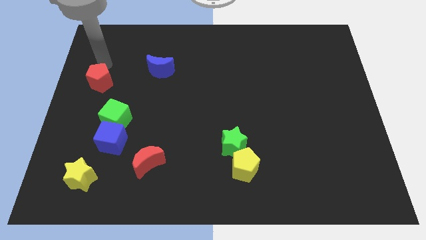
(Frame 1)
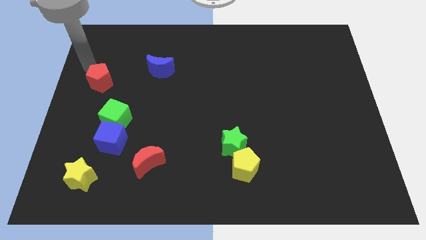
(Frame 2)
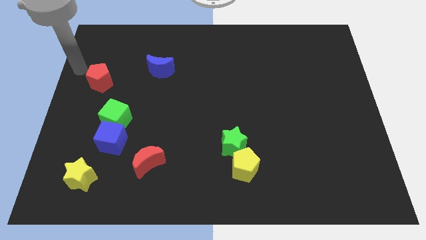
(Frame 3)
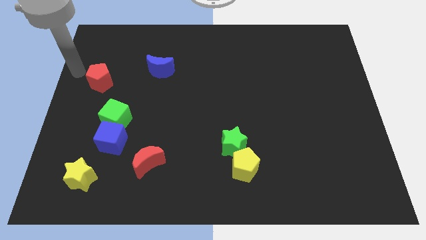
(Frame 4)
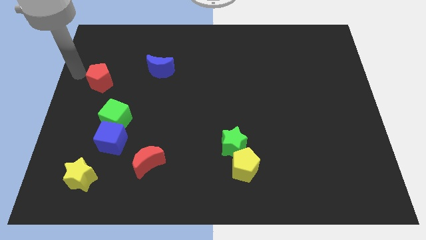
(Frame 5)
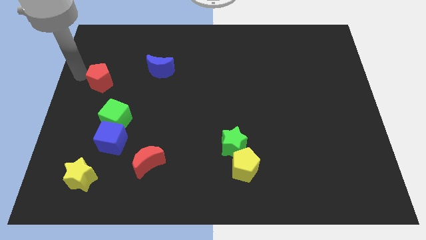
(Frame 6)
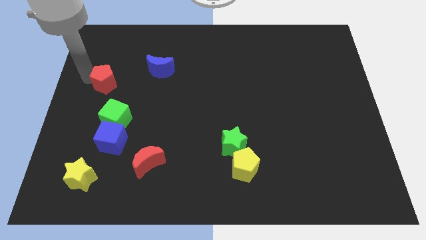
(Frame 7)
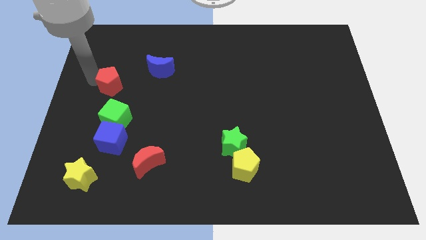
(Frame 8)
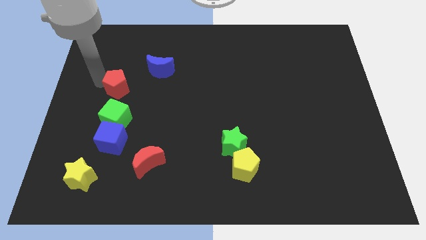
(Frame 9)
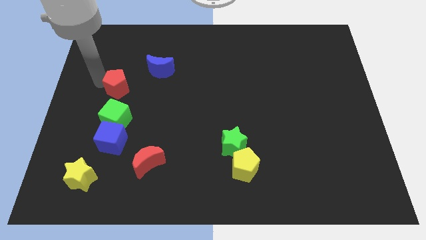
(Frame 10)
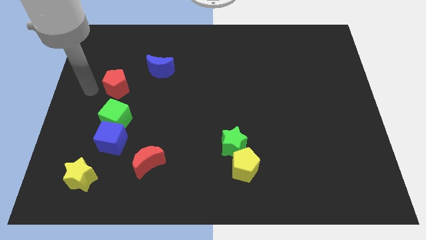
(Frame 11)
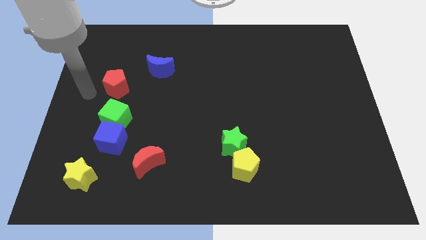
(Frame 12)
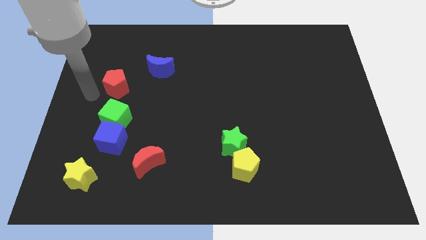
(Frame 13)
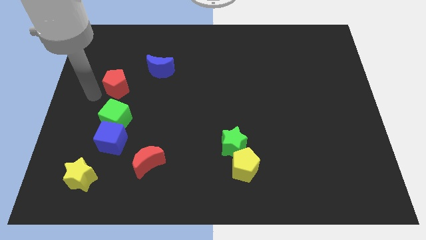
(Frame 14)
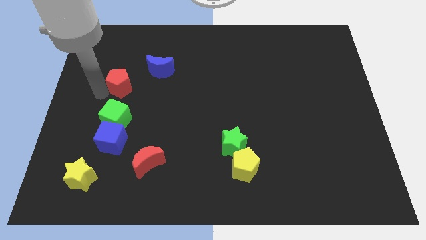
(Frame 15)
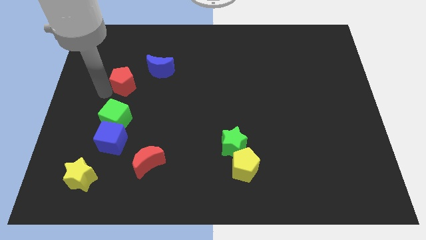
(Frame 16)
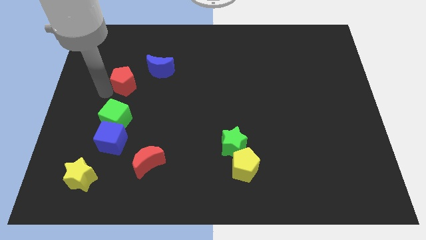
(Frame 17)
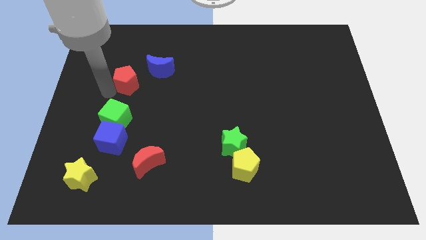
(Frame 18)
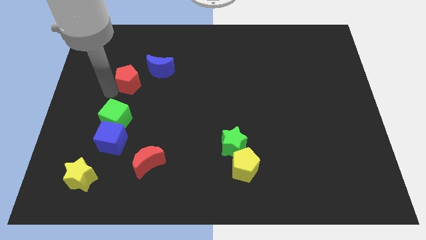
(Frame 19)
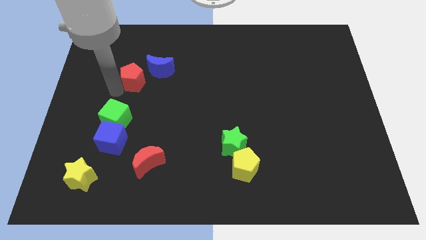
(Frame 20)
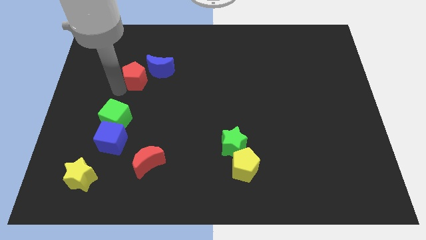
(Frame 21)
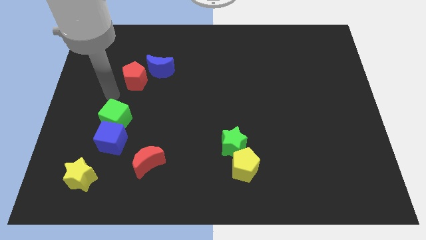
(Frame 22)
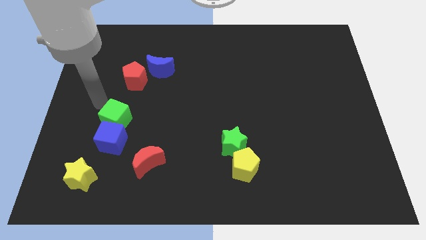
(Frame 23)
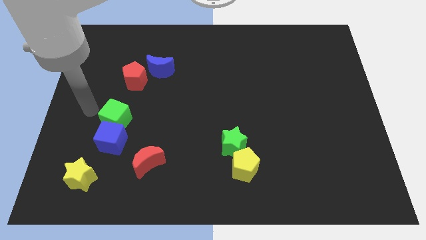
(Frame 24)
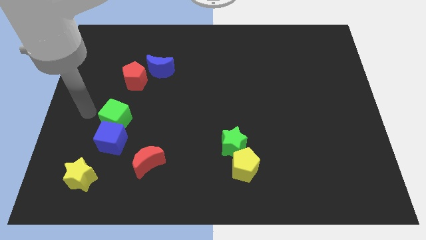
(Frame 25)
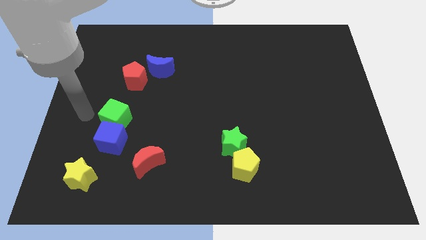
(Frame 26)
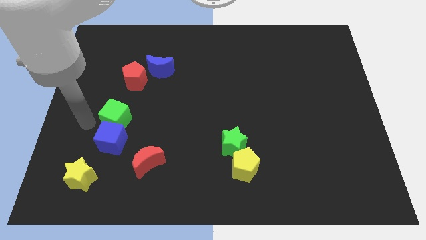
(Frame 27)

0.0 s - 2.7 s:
move the red pentagon to the bottom left of the blue moon

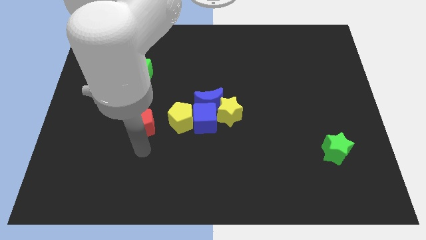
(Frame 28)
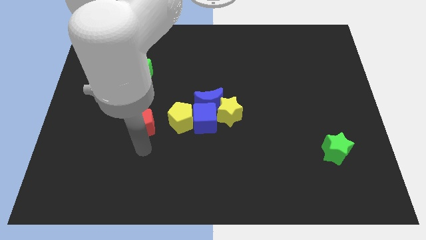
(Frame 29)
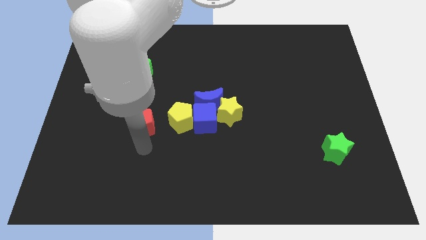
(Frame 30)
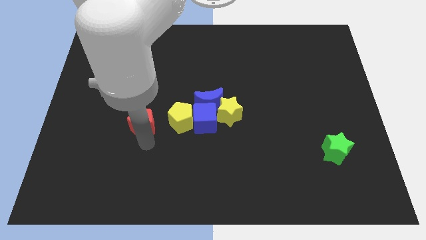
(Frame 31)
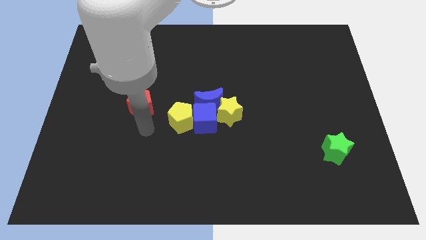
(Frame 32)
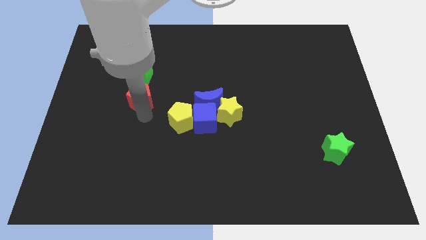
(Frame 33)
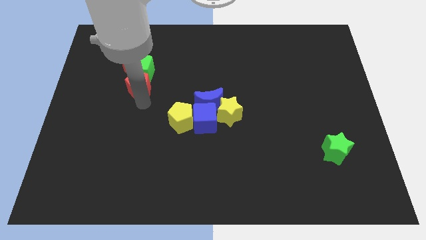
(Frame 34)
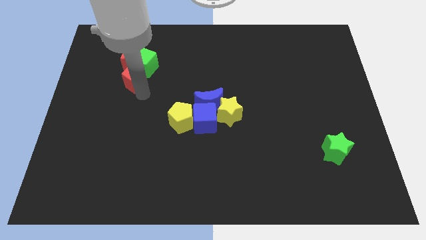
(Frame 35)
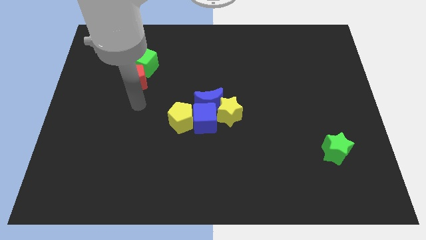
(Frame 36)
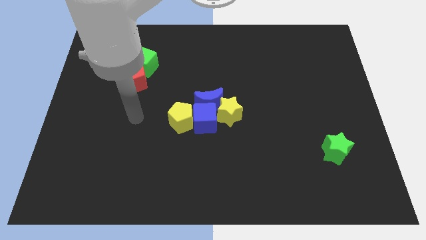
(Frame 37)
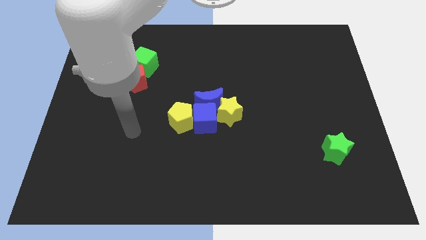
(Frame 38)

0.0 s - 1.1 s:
move the red pentagon into the green cube

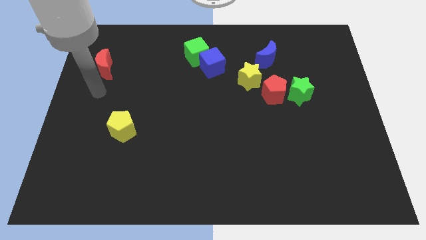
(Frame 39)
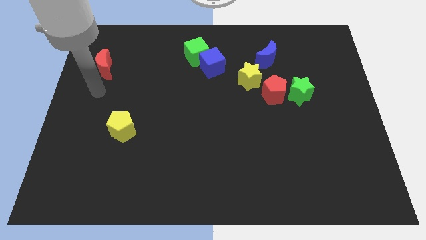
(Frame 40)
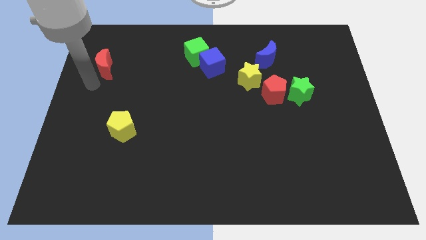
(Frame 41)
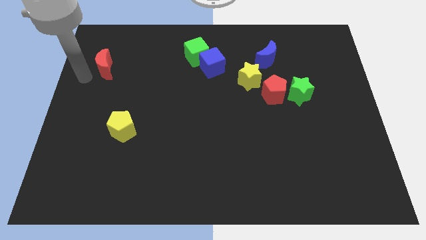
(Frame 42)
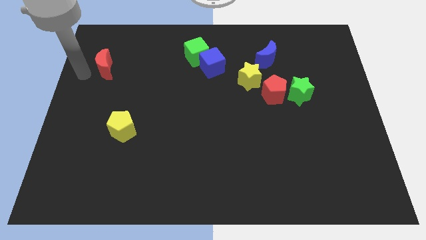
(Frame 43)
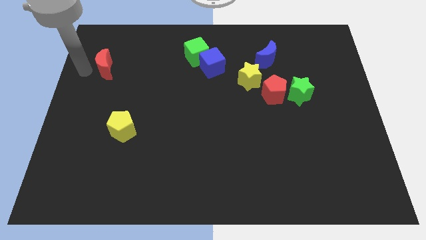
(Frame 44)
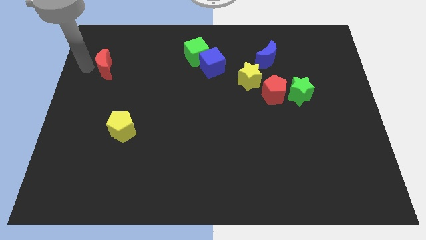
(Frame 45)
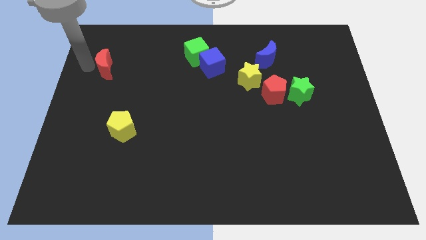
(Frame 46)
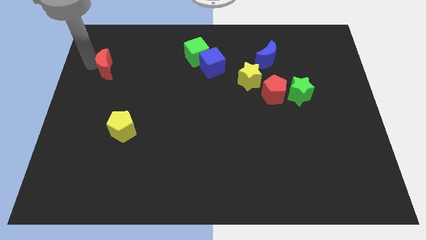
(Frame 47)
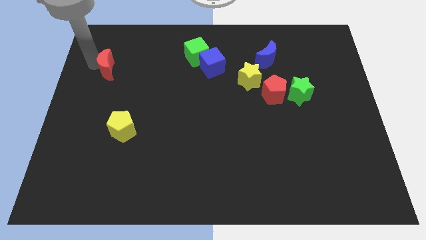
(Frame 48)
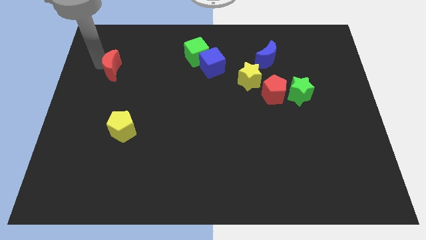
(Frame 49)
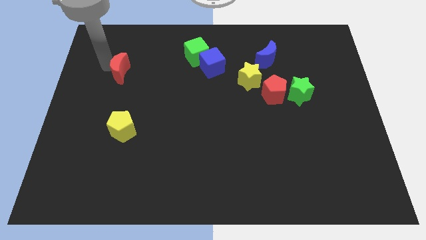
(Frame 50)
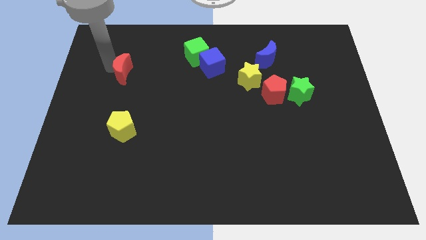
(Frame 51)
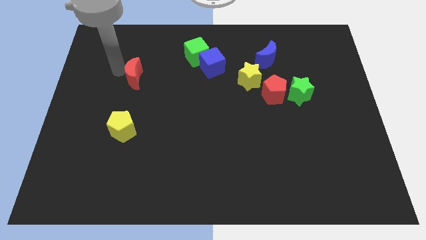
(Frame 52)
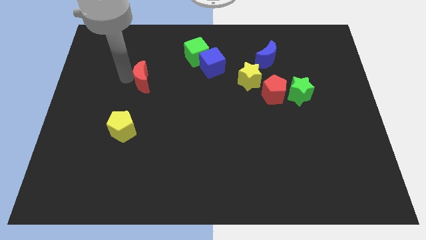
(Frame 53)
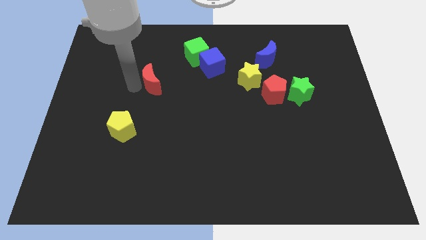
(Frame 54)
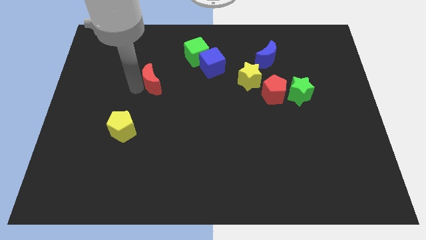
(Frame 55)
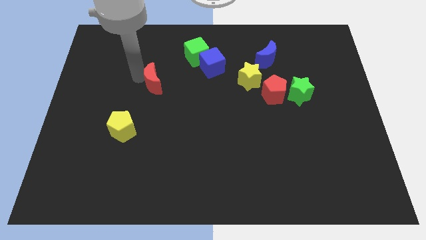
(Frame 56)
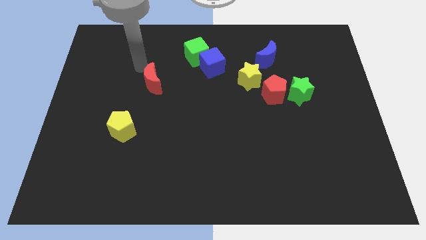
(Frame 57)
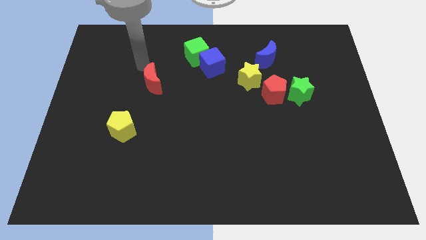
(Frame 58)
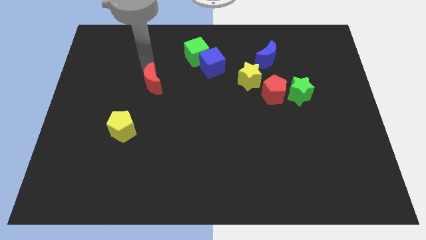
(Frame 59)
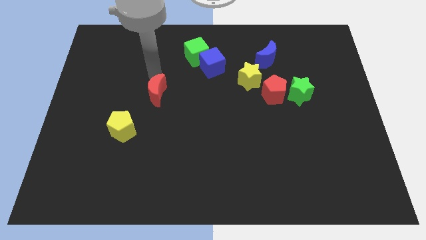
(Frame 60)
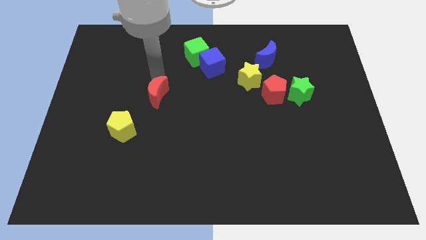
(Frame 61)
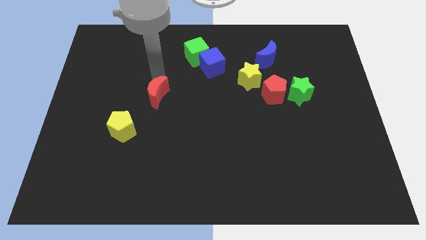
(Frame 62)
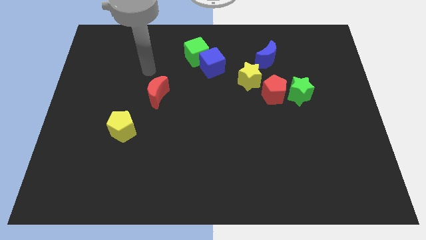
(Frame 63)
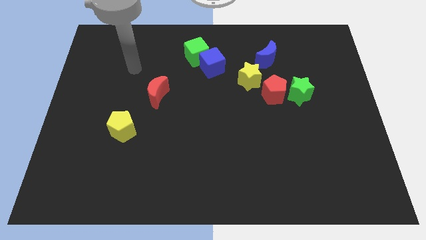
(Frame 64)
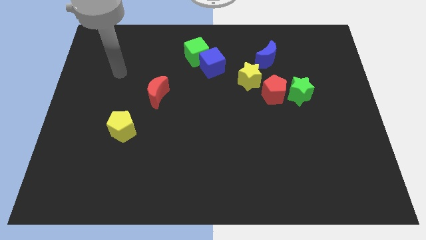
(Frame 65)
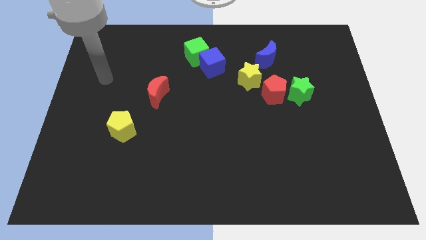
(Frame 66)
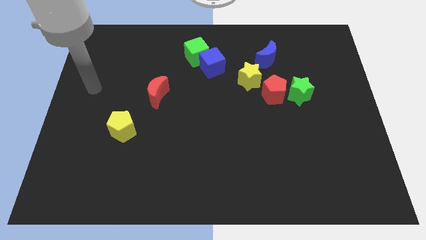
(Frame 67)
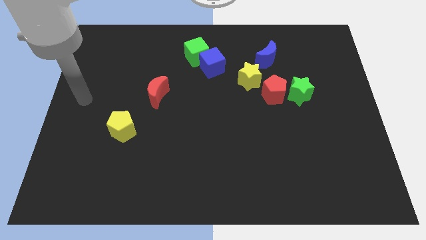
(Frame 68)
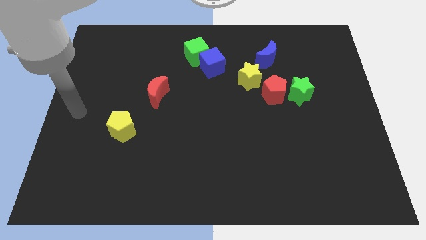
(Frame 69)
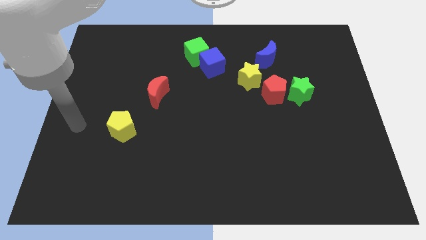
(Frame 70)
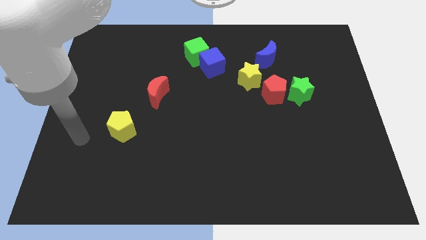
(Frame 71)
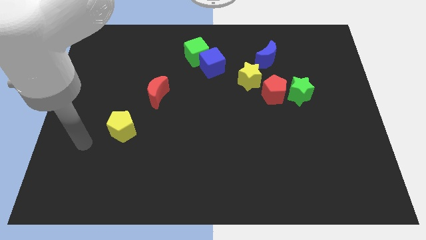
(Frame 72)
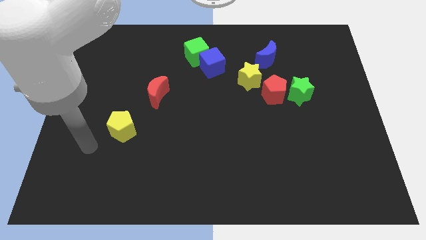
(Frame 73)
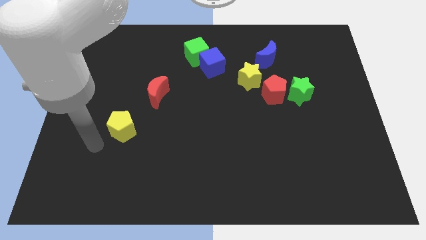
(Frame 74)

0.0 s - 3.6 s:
push the red crescent vertical to the top right to the yellow pentagon

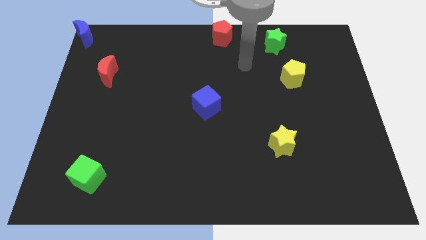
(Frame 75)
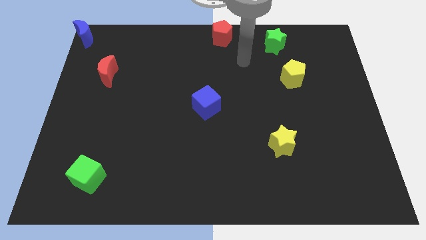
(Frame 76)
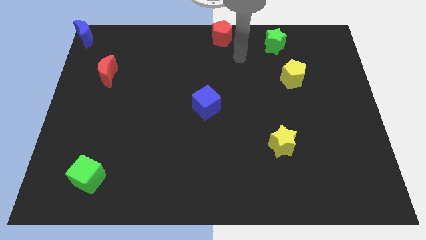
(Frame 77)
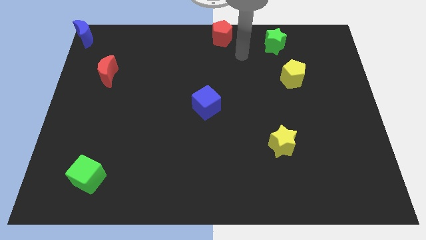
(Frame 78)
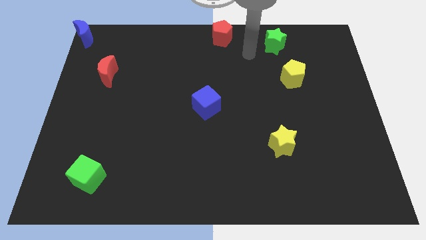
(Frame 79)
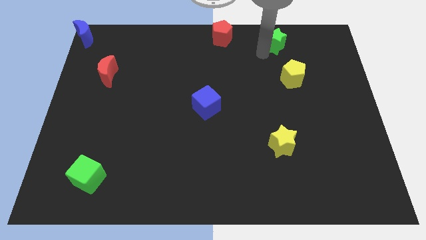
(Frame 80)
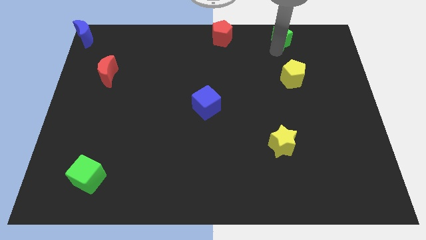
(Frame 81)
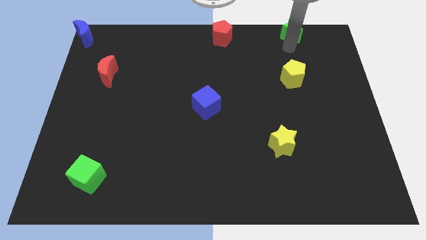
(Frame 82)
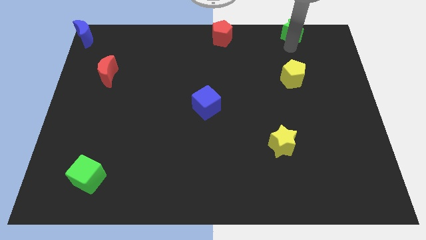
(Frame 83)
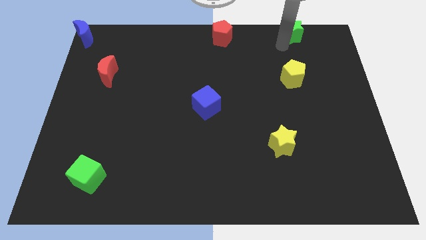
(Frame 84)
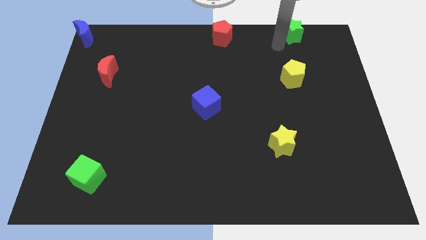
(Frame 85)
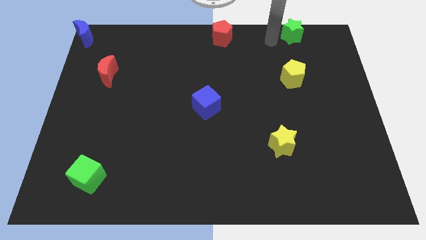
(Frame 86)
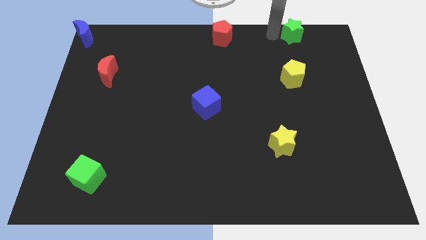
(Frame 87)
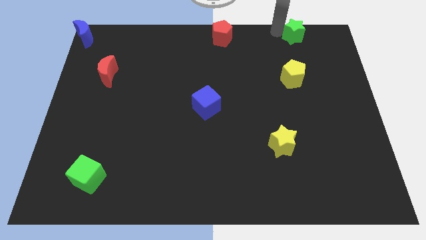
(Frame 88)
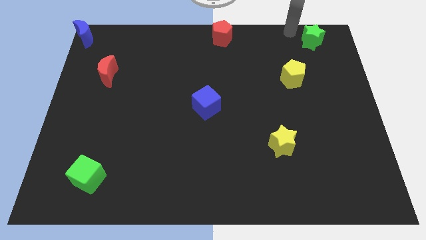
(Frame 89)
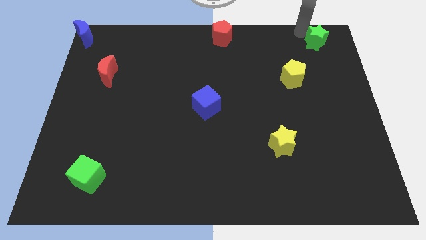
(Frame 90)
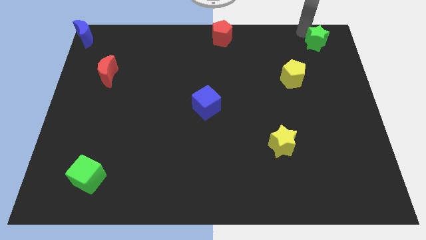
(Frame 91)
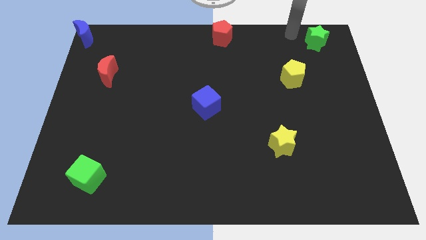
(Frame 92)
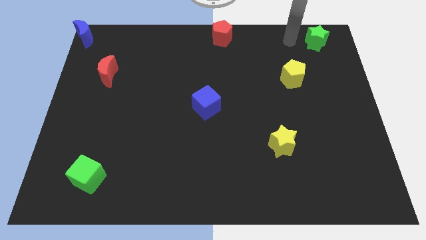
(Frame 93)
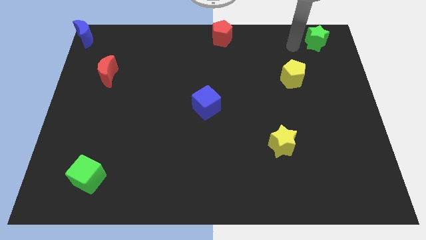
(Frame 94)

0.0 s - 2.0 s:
push the green star diagonal above yellow pentagon
